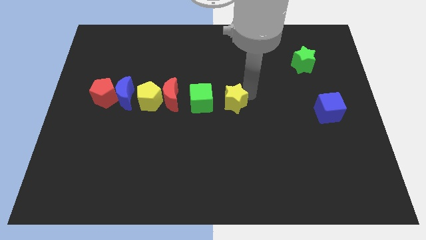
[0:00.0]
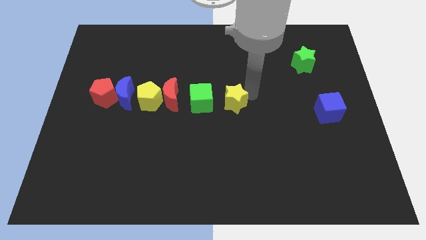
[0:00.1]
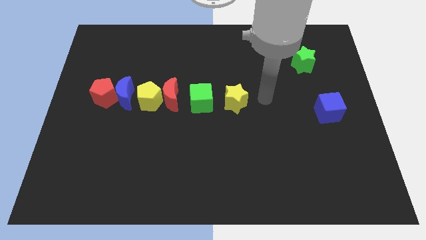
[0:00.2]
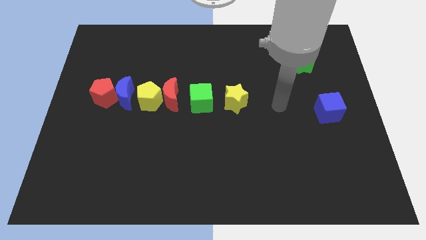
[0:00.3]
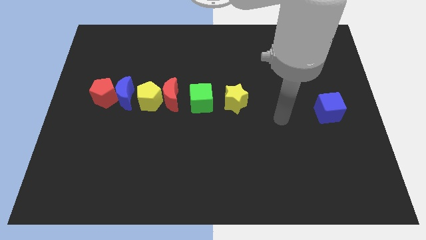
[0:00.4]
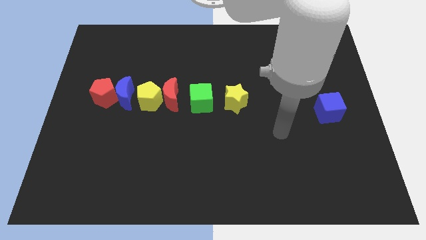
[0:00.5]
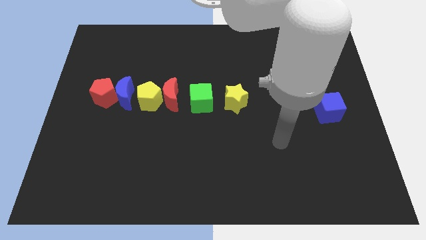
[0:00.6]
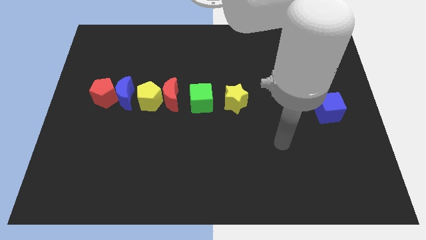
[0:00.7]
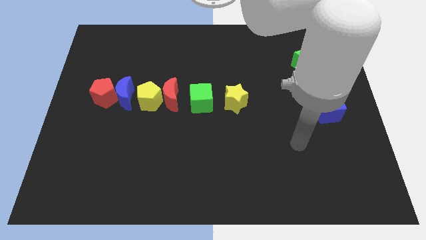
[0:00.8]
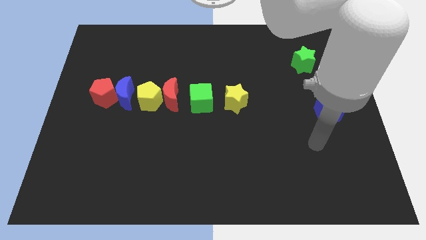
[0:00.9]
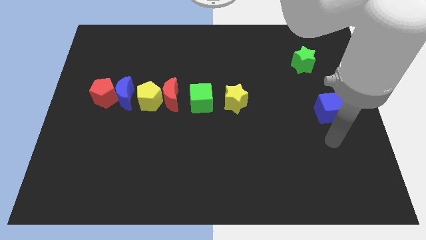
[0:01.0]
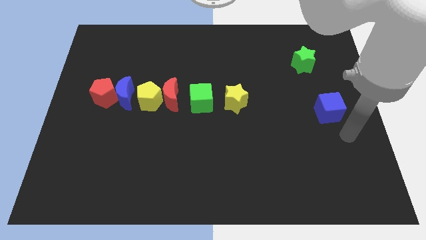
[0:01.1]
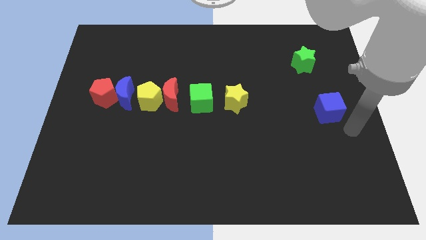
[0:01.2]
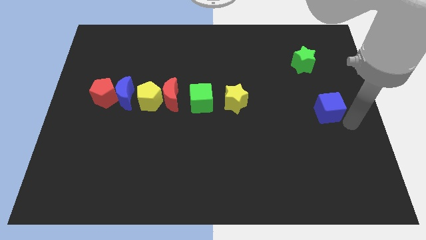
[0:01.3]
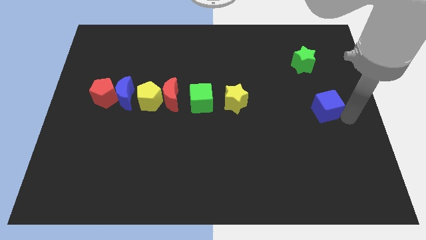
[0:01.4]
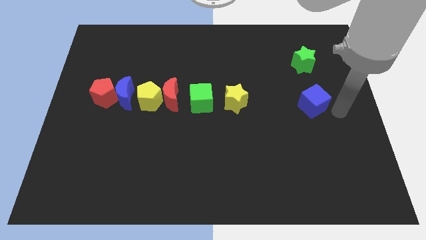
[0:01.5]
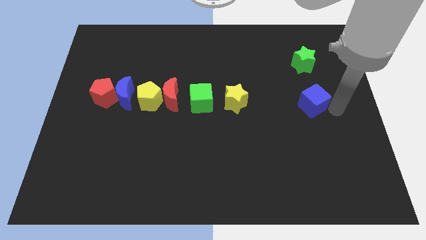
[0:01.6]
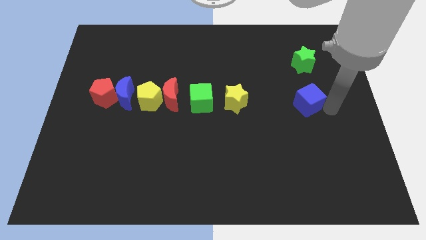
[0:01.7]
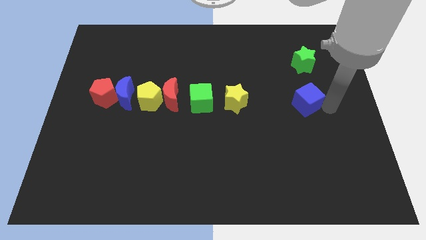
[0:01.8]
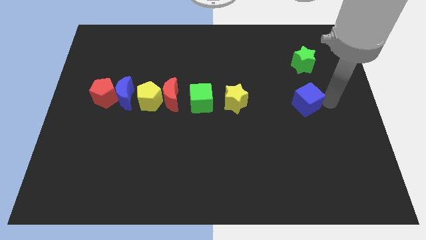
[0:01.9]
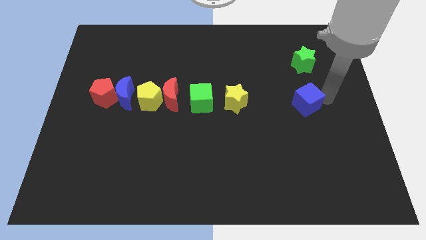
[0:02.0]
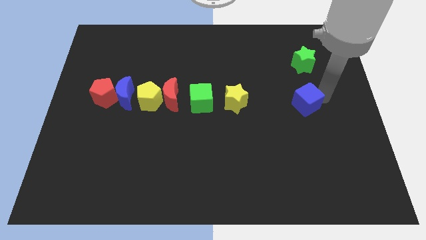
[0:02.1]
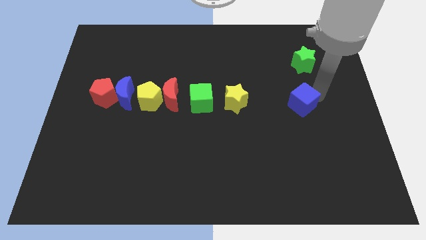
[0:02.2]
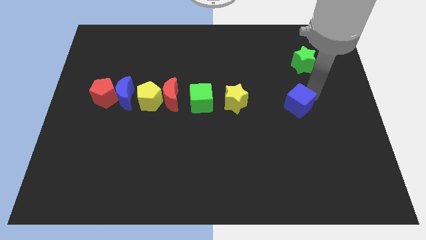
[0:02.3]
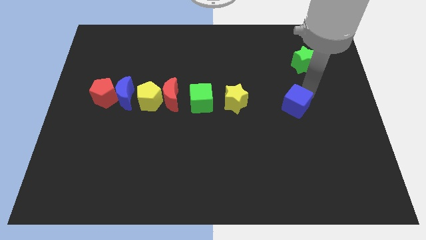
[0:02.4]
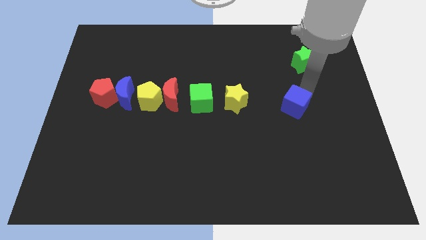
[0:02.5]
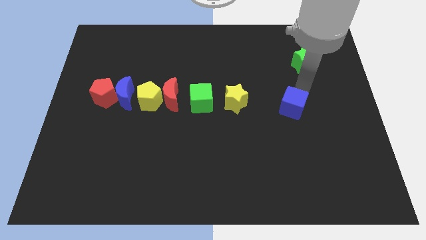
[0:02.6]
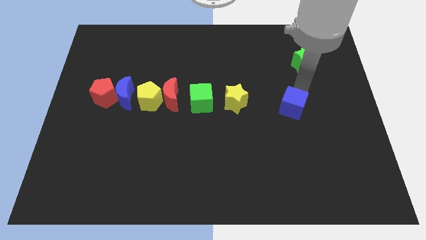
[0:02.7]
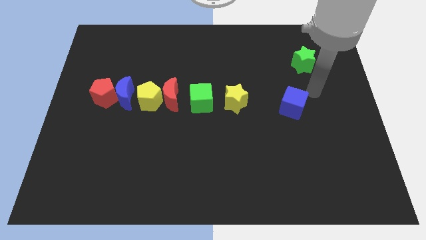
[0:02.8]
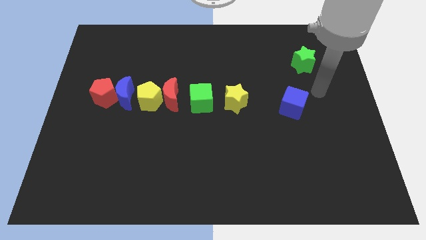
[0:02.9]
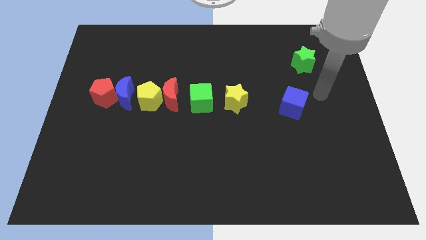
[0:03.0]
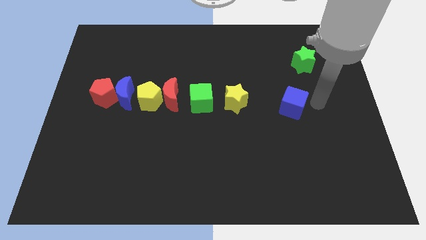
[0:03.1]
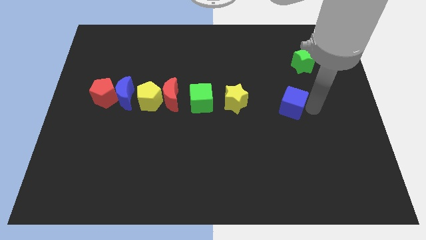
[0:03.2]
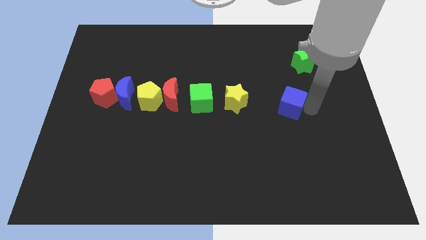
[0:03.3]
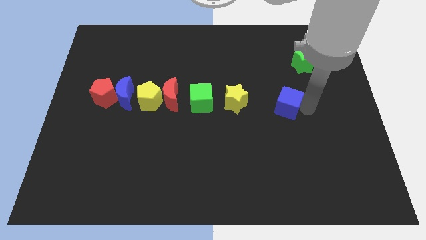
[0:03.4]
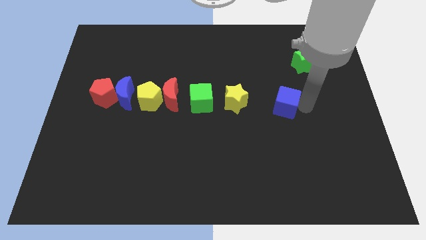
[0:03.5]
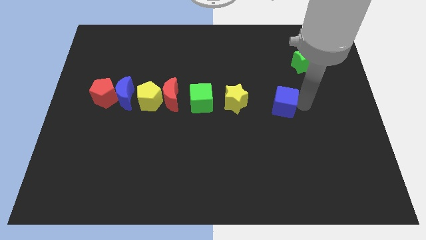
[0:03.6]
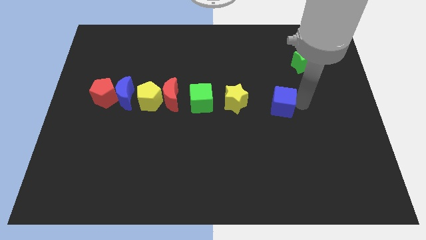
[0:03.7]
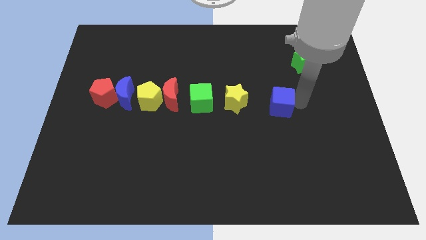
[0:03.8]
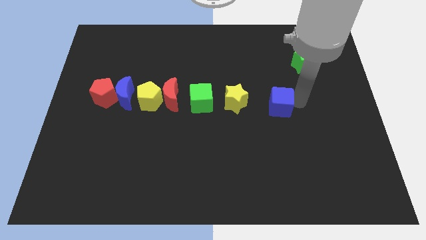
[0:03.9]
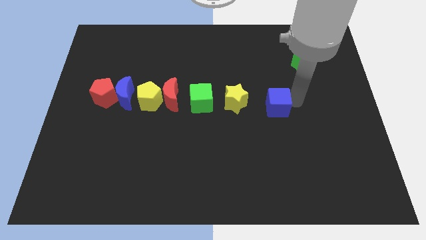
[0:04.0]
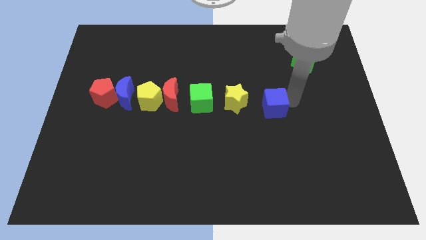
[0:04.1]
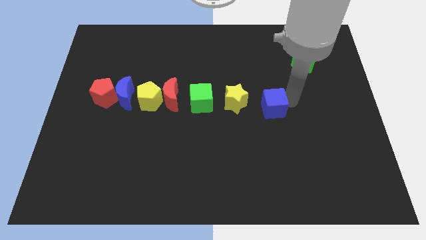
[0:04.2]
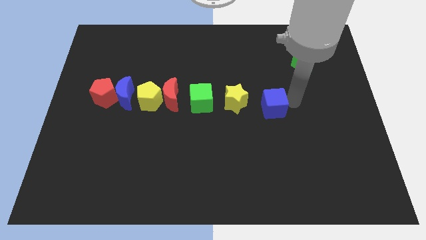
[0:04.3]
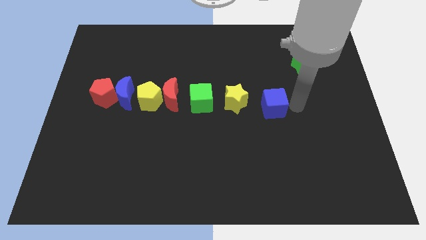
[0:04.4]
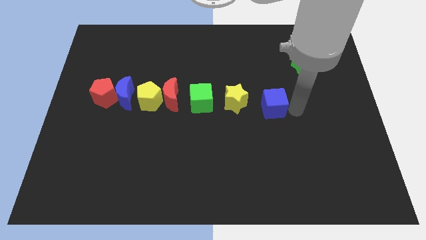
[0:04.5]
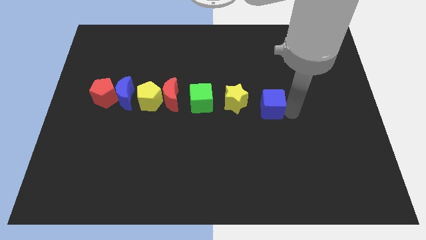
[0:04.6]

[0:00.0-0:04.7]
place the blue cube parallel to yellow star

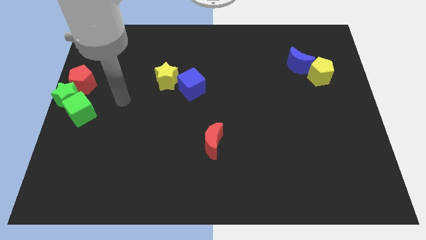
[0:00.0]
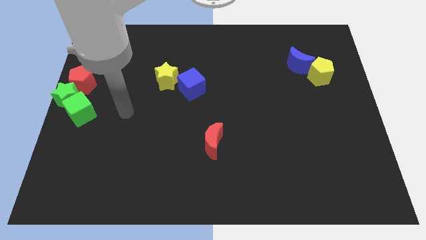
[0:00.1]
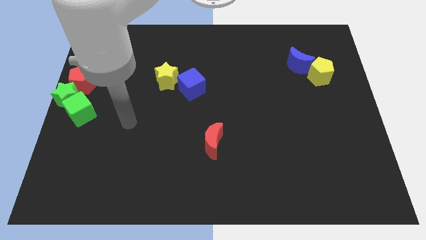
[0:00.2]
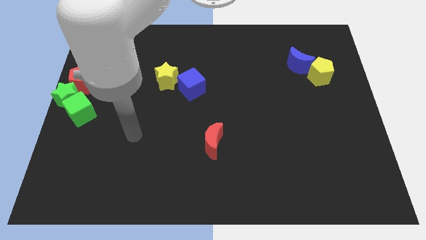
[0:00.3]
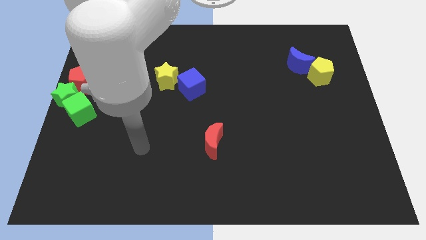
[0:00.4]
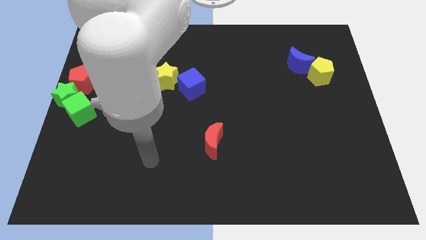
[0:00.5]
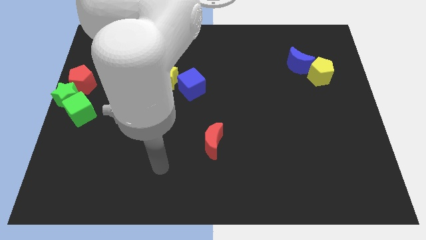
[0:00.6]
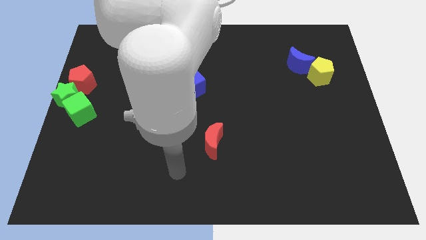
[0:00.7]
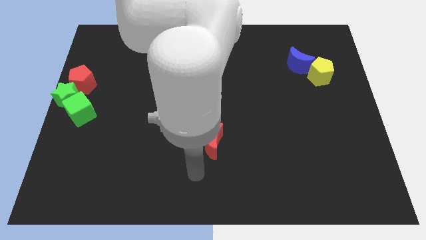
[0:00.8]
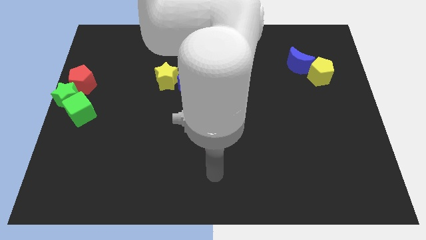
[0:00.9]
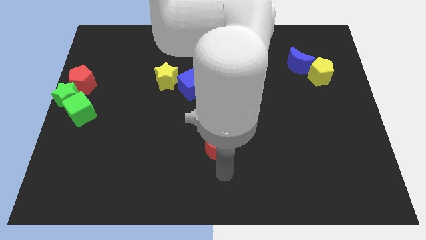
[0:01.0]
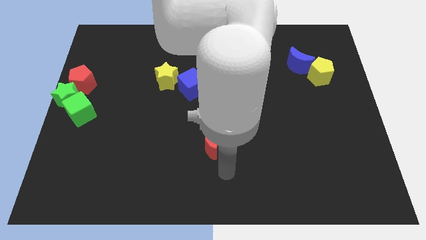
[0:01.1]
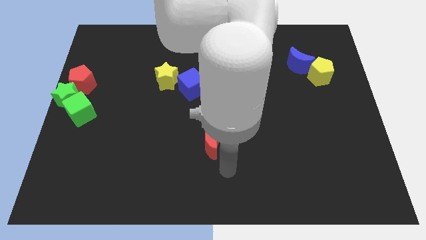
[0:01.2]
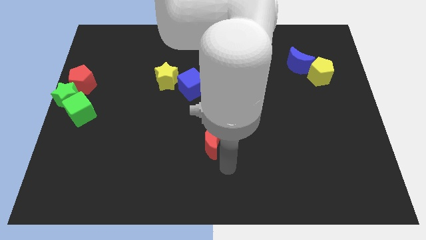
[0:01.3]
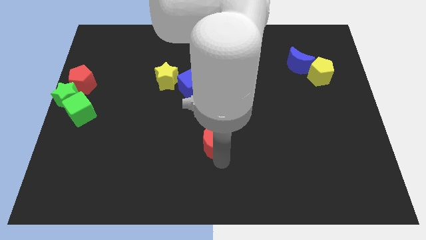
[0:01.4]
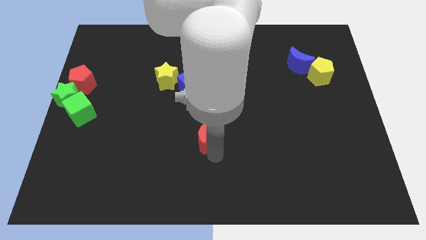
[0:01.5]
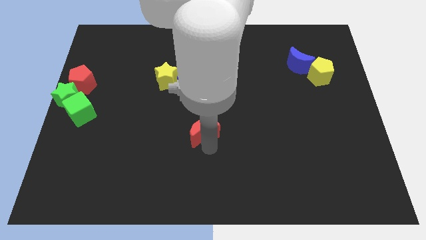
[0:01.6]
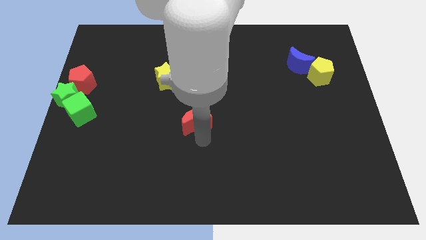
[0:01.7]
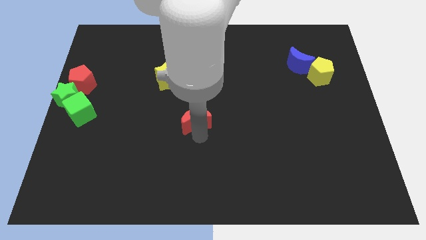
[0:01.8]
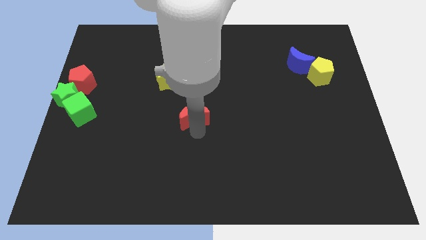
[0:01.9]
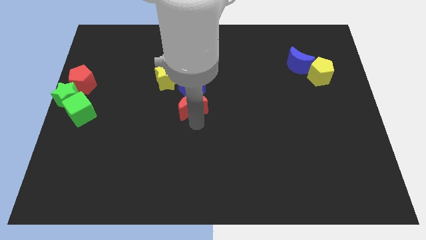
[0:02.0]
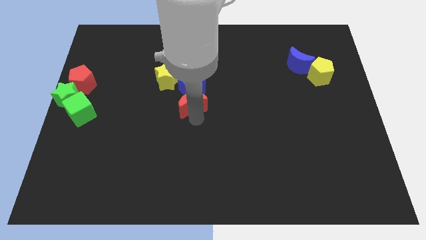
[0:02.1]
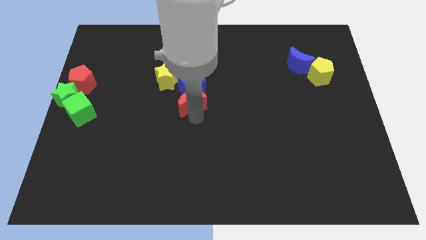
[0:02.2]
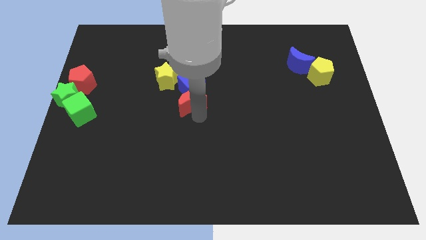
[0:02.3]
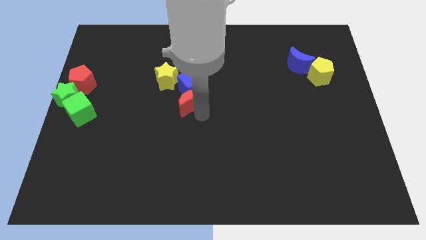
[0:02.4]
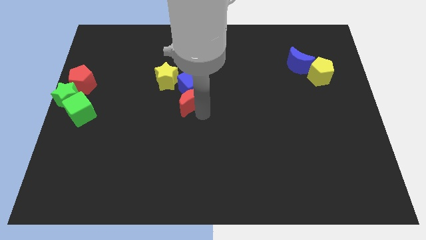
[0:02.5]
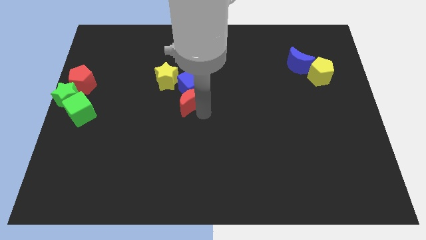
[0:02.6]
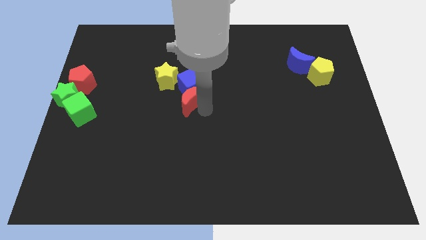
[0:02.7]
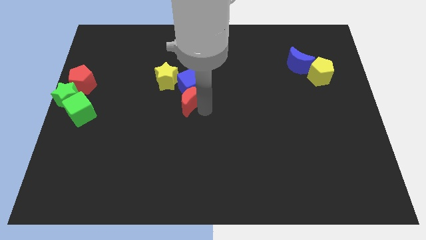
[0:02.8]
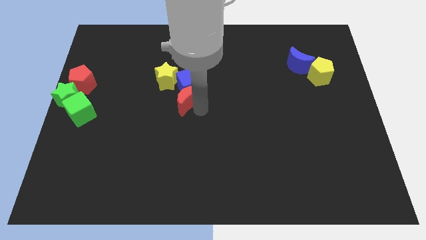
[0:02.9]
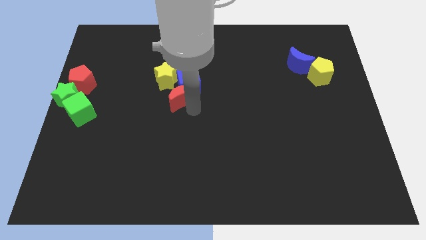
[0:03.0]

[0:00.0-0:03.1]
push the red moon into the blue cube

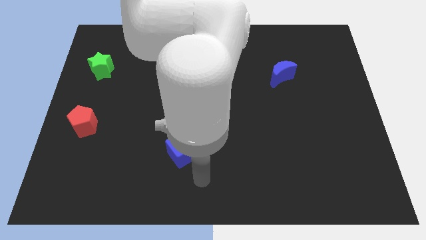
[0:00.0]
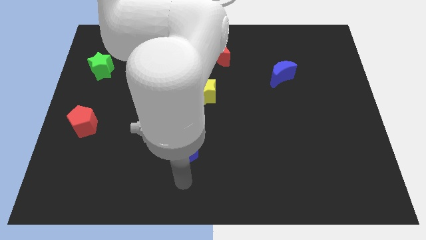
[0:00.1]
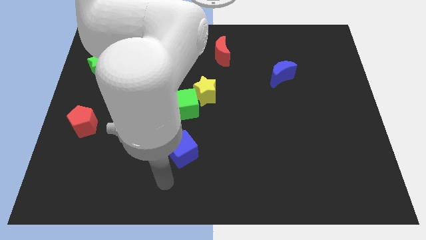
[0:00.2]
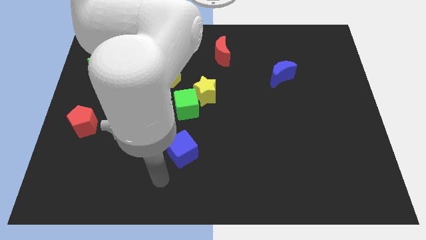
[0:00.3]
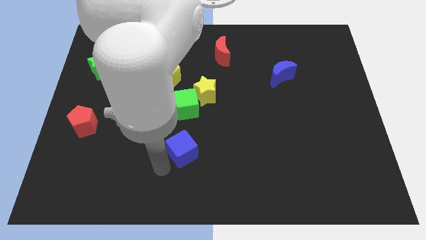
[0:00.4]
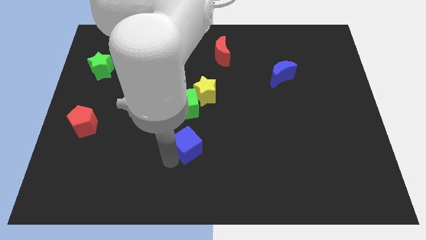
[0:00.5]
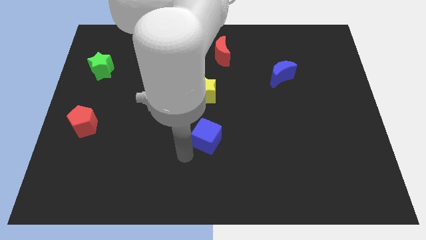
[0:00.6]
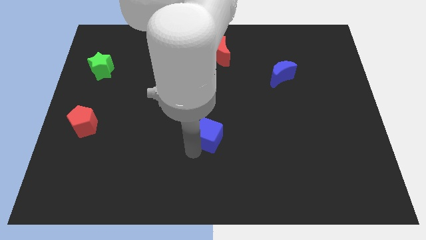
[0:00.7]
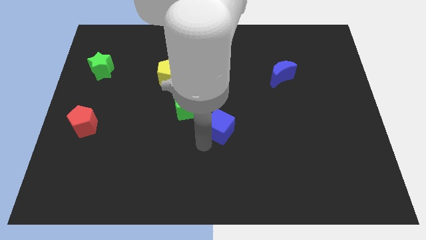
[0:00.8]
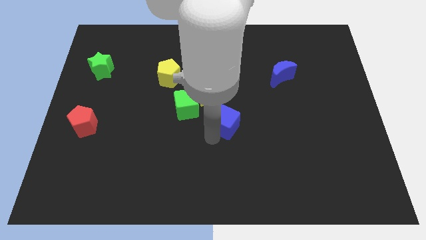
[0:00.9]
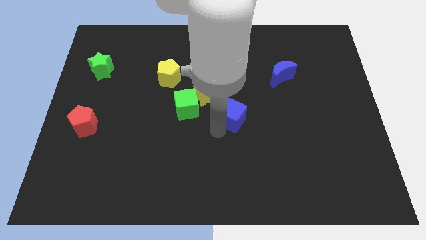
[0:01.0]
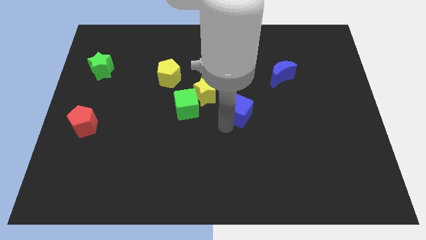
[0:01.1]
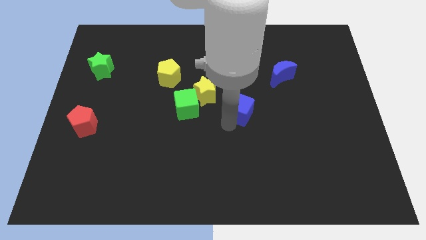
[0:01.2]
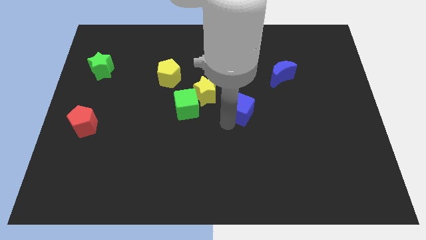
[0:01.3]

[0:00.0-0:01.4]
move the blue cube towards the blue moon
